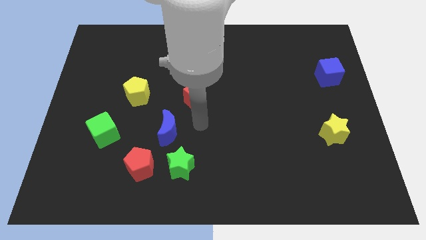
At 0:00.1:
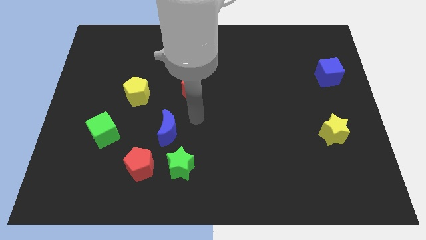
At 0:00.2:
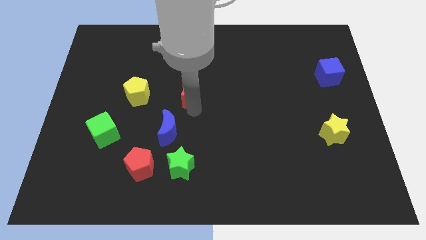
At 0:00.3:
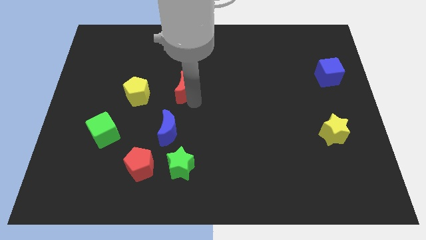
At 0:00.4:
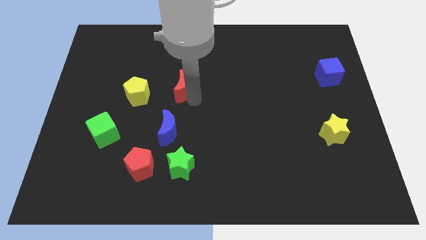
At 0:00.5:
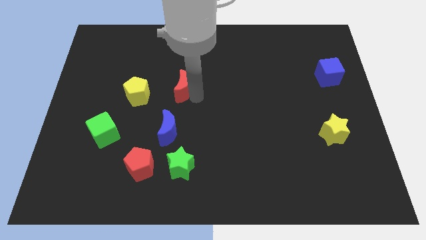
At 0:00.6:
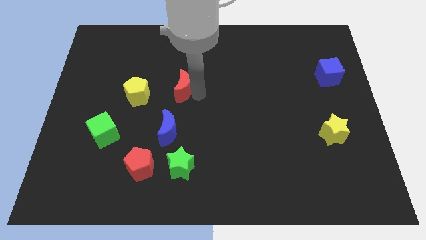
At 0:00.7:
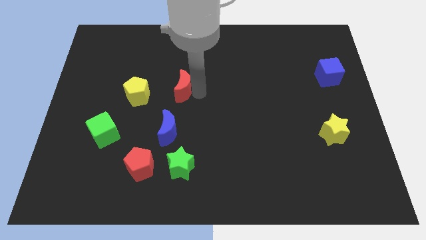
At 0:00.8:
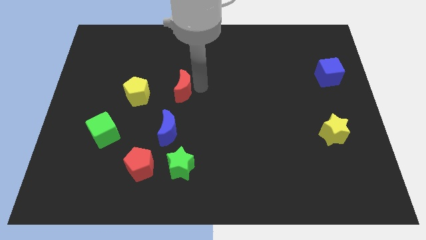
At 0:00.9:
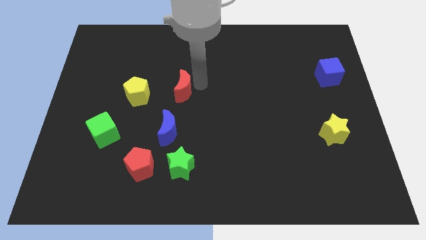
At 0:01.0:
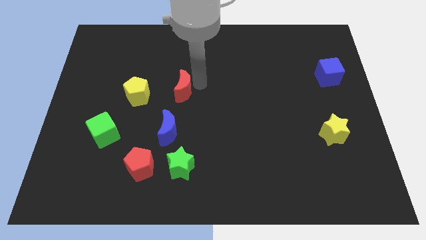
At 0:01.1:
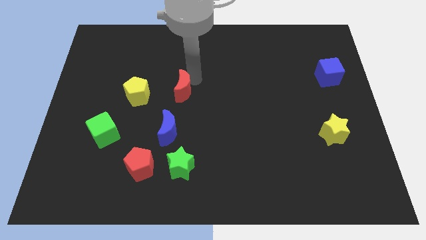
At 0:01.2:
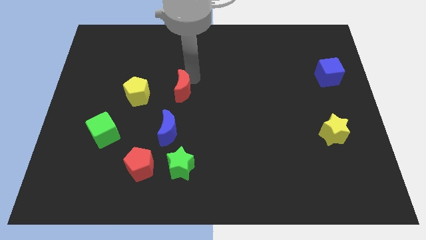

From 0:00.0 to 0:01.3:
move the red crescent to the right of the yellow pentagon

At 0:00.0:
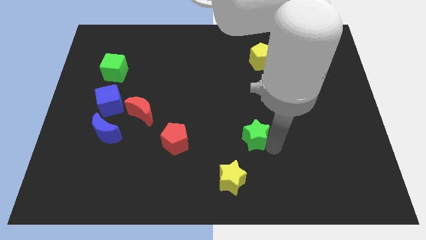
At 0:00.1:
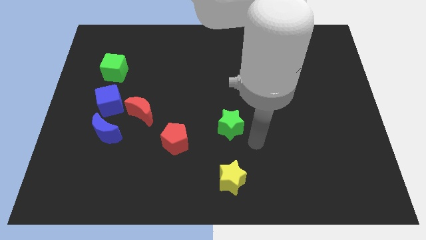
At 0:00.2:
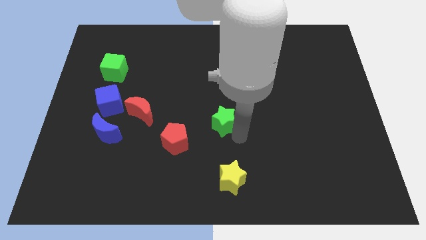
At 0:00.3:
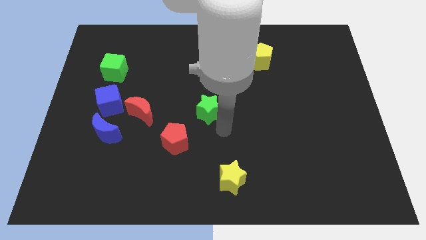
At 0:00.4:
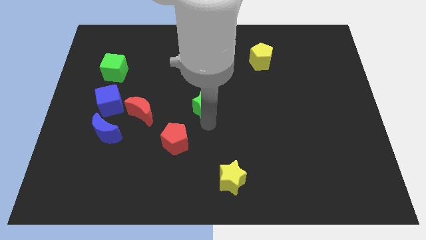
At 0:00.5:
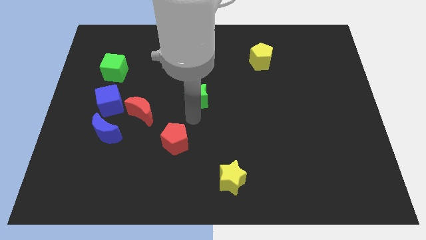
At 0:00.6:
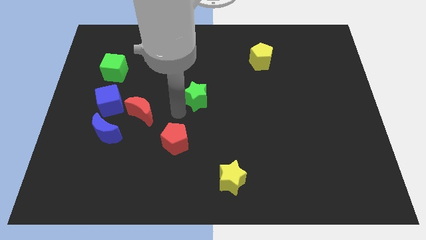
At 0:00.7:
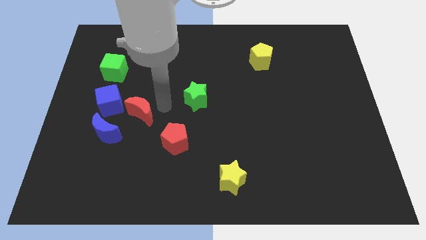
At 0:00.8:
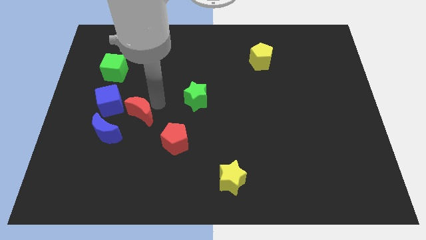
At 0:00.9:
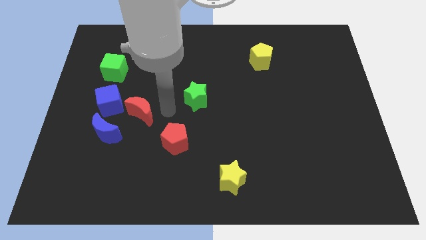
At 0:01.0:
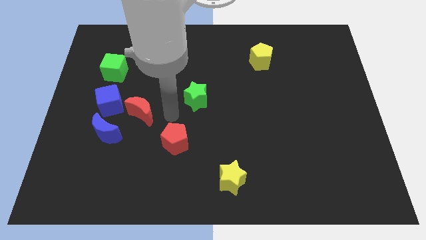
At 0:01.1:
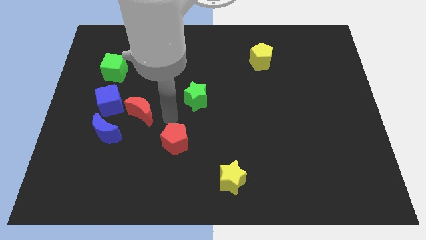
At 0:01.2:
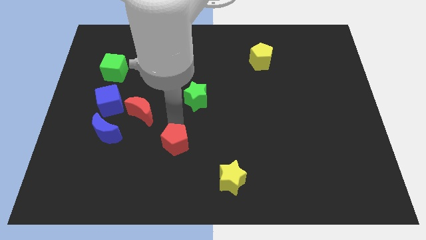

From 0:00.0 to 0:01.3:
move green star diagonally left

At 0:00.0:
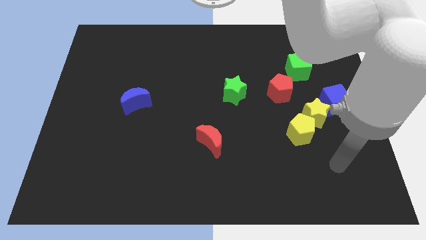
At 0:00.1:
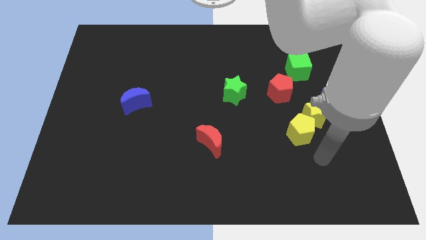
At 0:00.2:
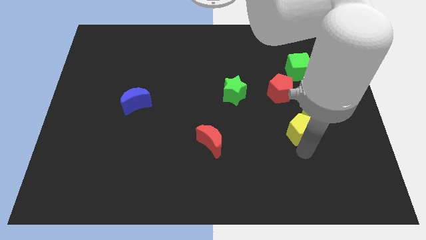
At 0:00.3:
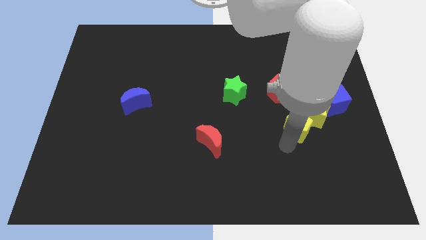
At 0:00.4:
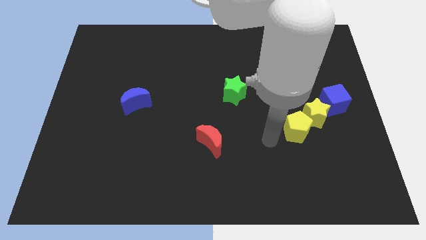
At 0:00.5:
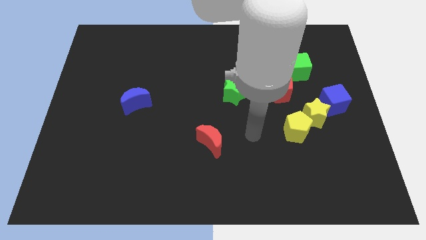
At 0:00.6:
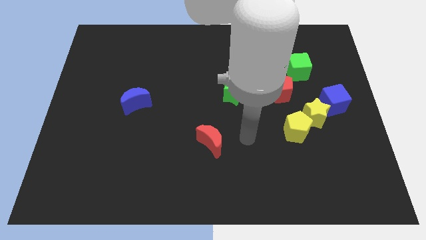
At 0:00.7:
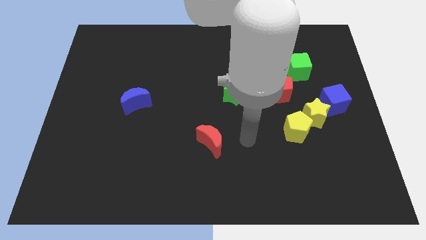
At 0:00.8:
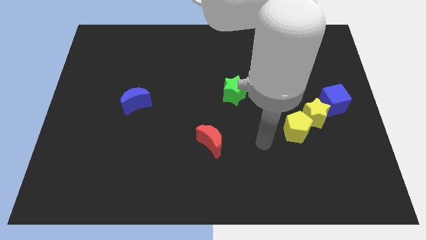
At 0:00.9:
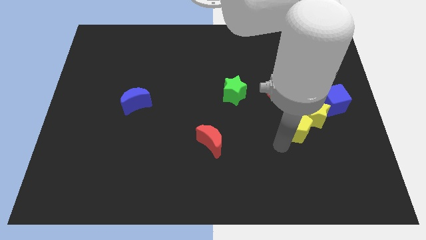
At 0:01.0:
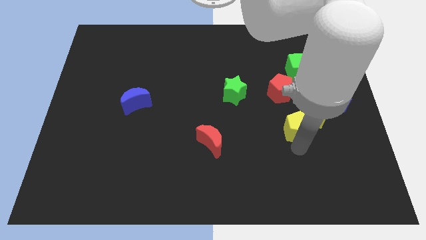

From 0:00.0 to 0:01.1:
move your arm to the bottom side of the yellow pentagon

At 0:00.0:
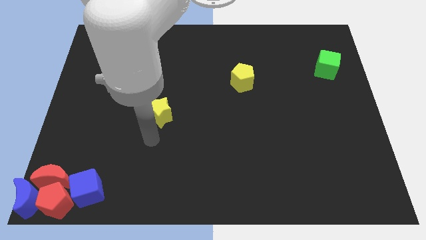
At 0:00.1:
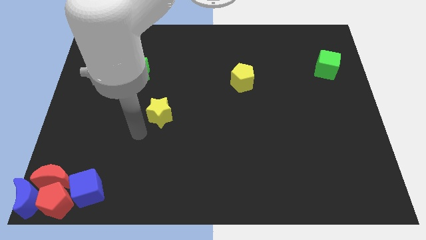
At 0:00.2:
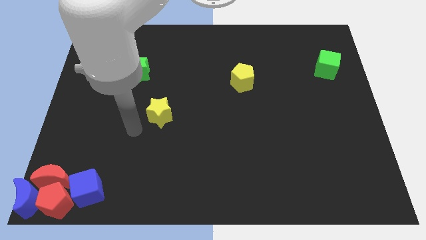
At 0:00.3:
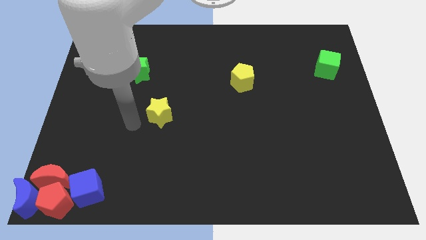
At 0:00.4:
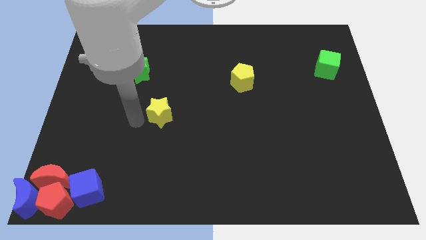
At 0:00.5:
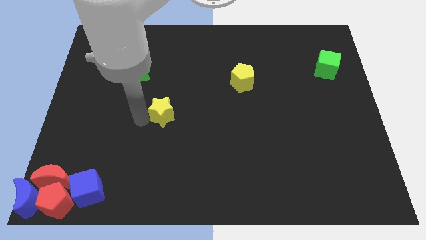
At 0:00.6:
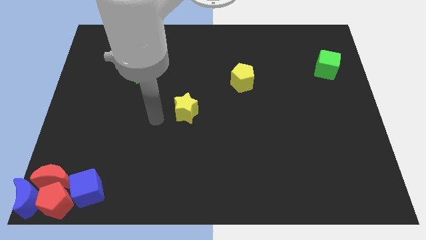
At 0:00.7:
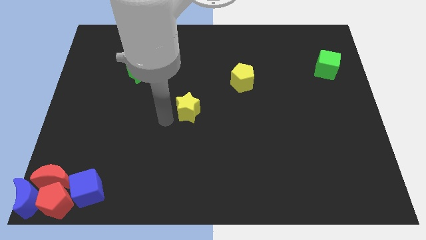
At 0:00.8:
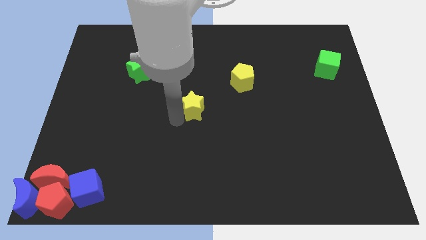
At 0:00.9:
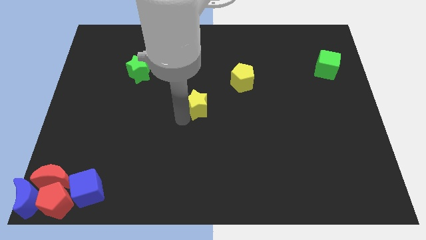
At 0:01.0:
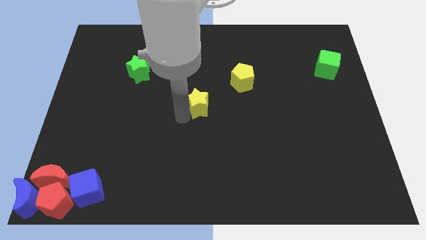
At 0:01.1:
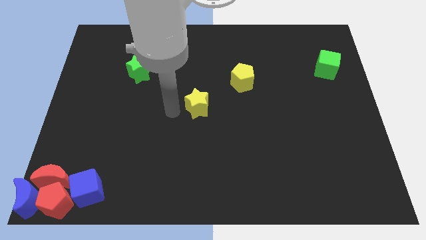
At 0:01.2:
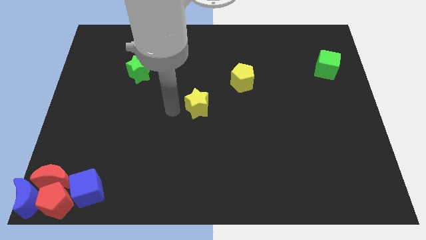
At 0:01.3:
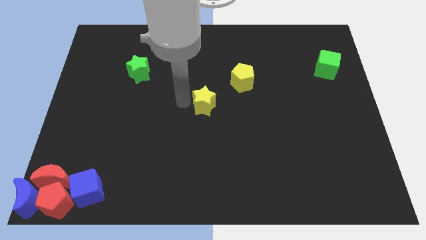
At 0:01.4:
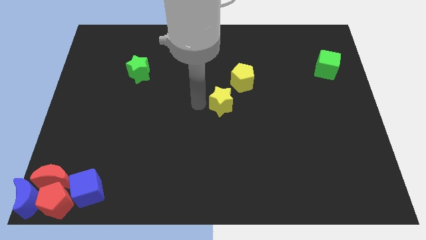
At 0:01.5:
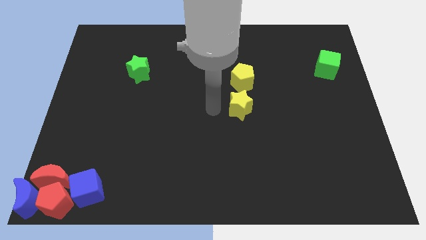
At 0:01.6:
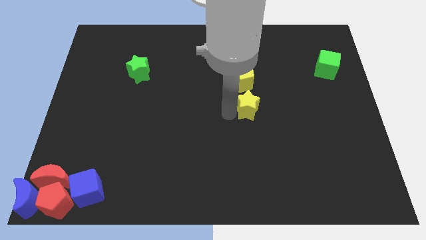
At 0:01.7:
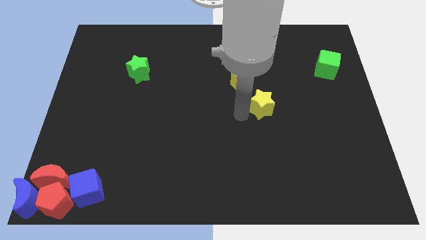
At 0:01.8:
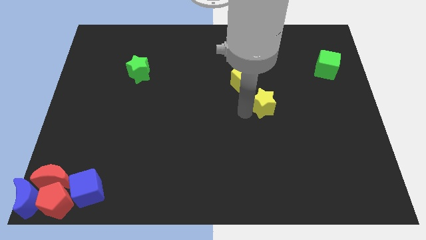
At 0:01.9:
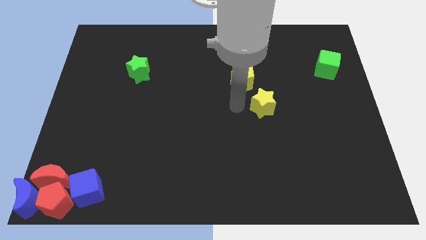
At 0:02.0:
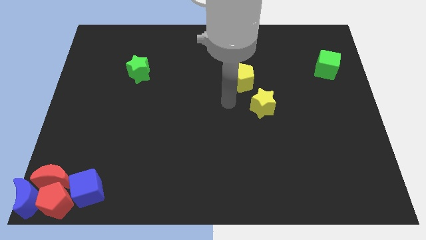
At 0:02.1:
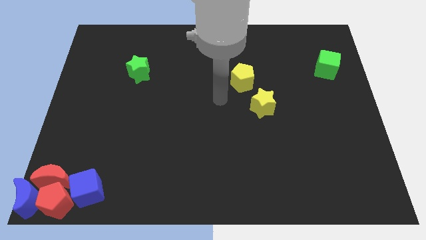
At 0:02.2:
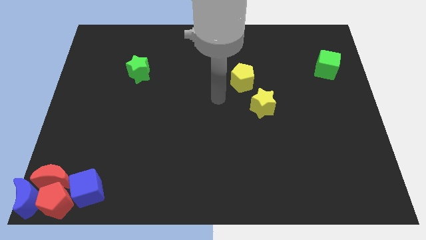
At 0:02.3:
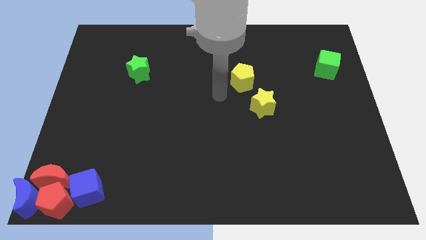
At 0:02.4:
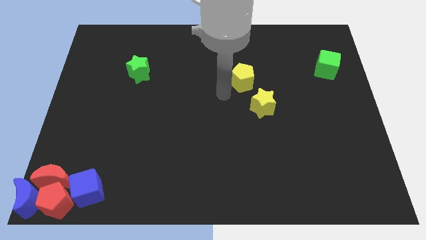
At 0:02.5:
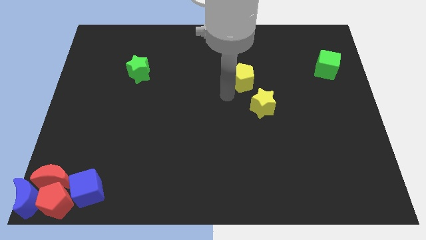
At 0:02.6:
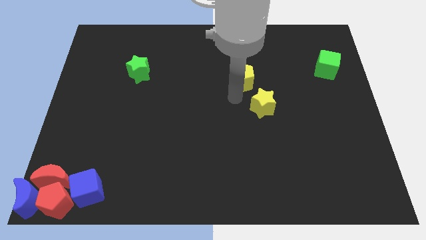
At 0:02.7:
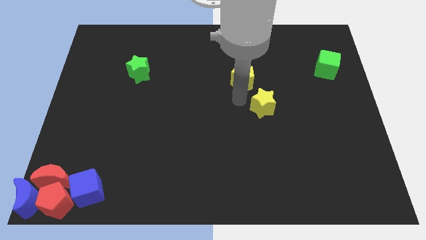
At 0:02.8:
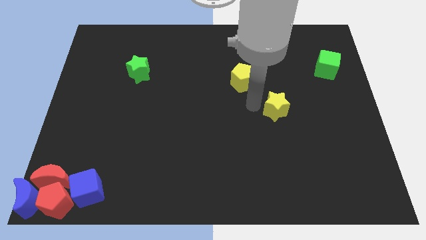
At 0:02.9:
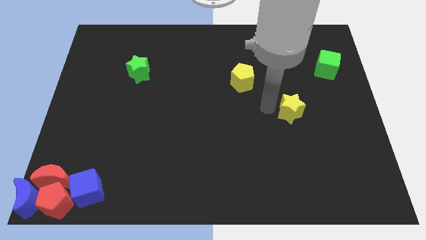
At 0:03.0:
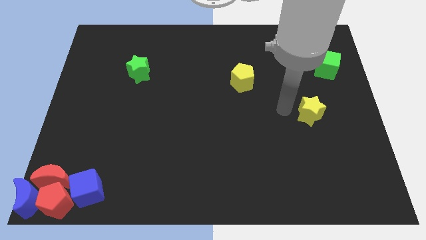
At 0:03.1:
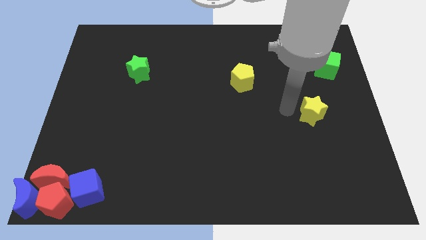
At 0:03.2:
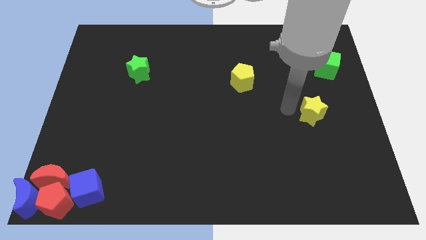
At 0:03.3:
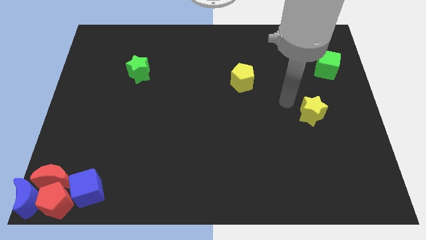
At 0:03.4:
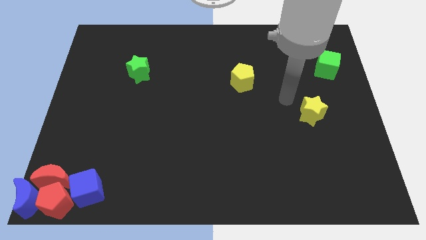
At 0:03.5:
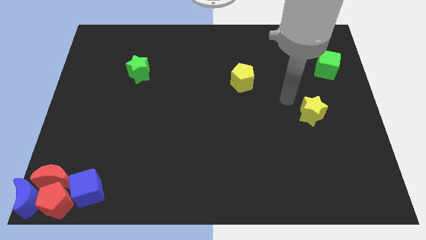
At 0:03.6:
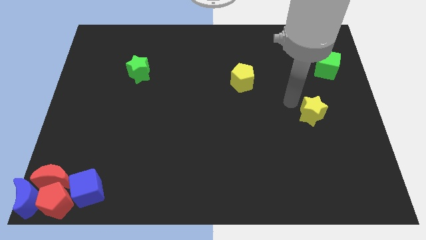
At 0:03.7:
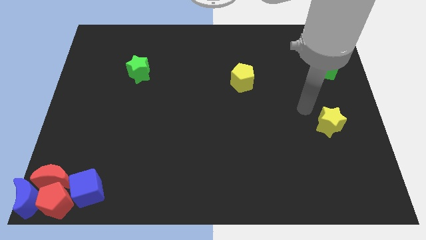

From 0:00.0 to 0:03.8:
place the yellow star vertically below the green cube

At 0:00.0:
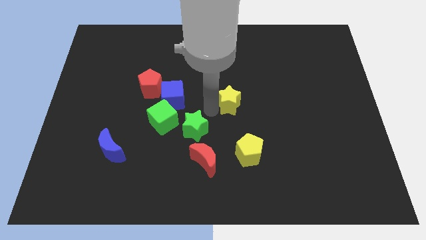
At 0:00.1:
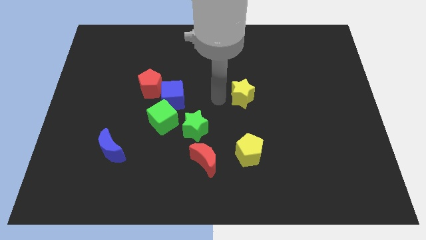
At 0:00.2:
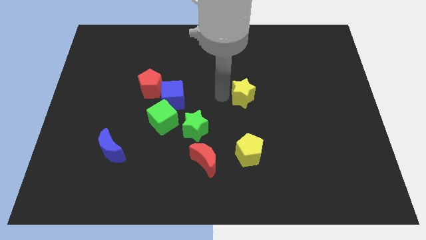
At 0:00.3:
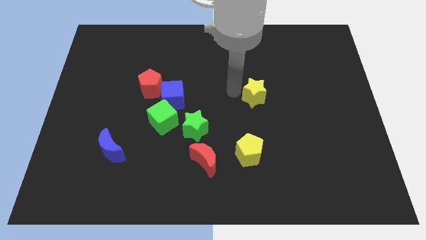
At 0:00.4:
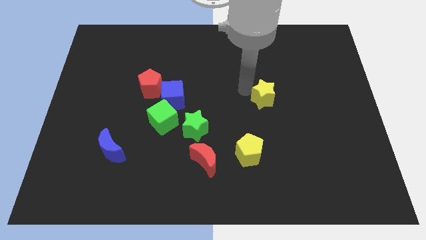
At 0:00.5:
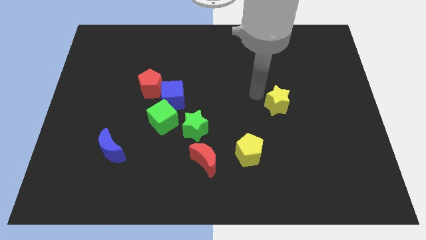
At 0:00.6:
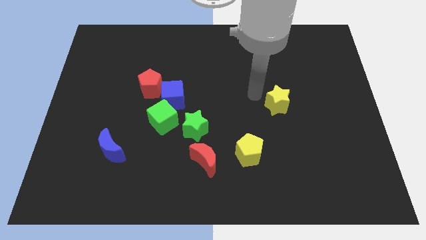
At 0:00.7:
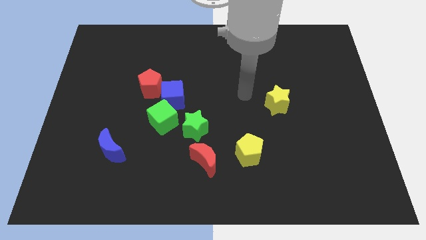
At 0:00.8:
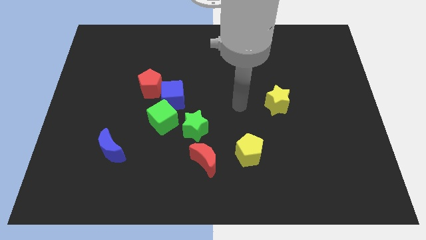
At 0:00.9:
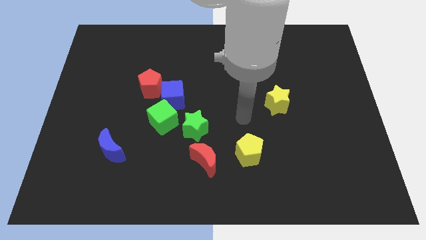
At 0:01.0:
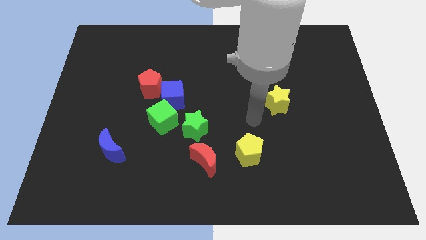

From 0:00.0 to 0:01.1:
push the yellow star to the top right of the yellow pentagon

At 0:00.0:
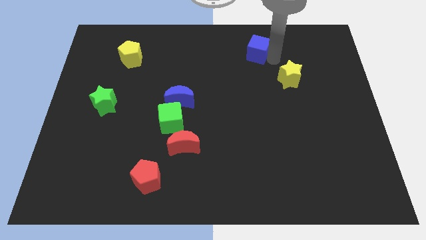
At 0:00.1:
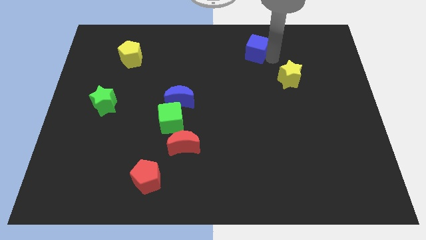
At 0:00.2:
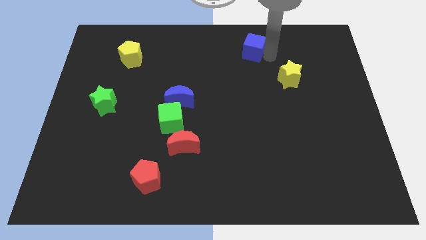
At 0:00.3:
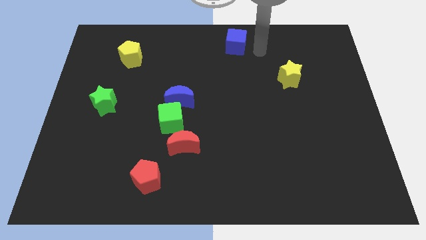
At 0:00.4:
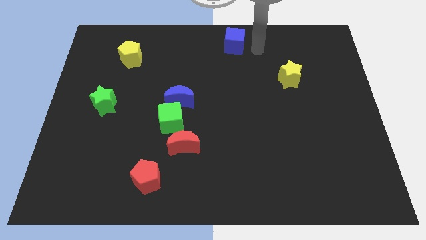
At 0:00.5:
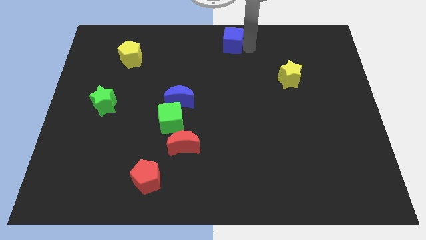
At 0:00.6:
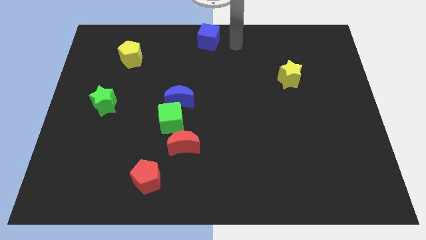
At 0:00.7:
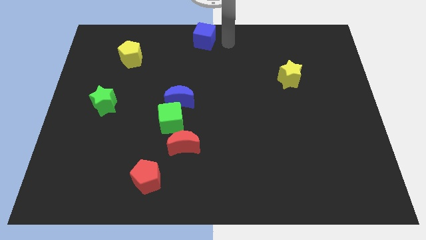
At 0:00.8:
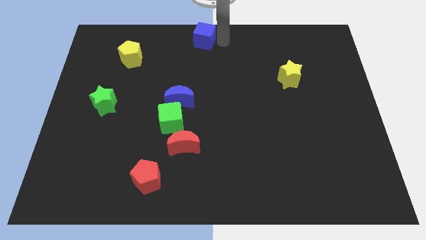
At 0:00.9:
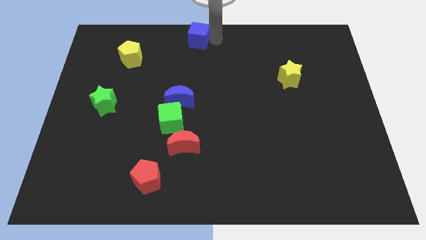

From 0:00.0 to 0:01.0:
place the blue cube at top center of the board
